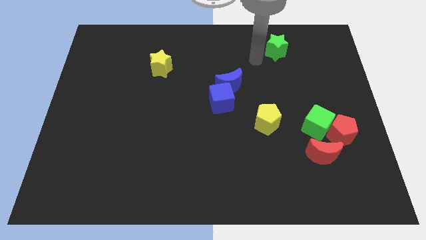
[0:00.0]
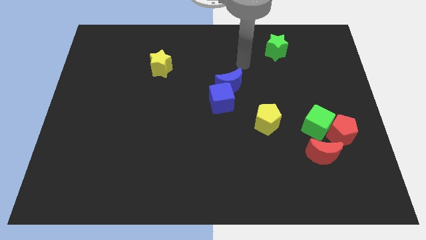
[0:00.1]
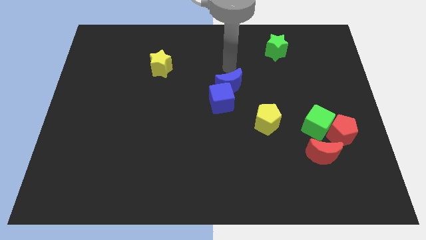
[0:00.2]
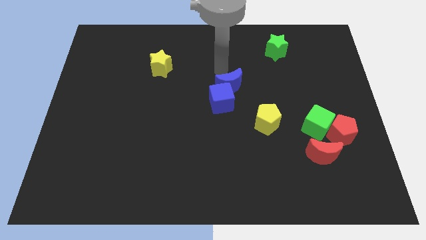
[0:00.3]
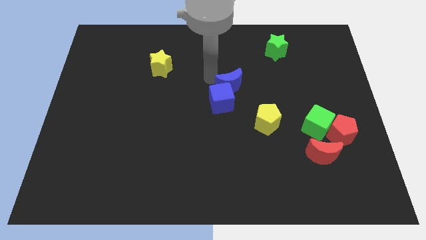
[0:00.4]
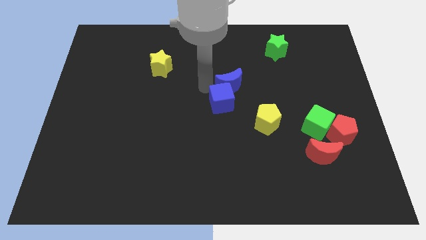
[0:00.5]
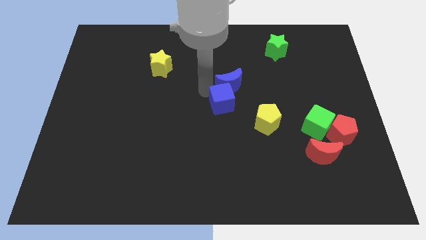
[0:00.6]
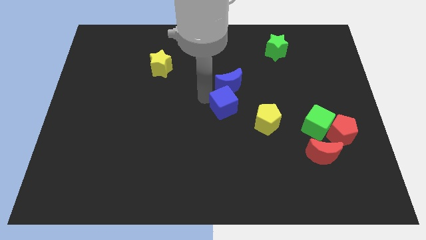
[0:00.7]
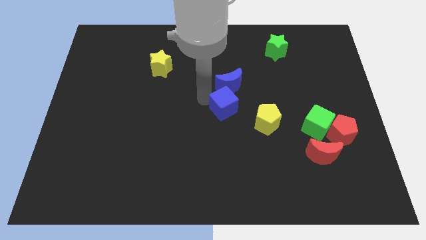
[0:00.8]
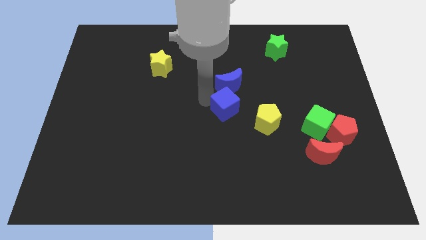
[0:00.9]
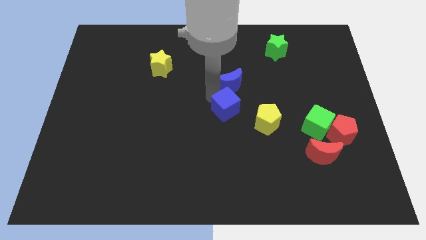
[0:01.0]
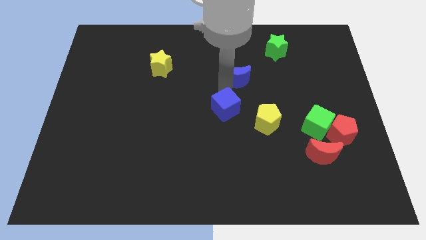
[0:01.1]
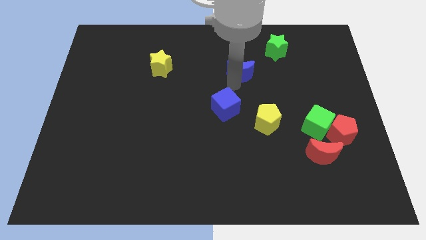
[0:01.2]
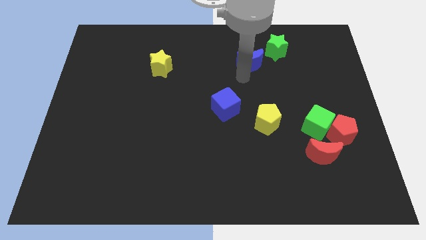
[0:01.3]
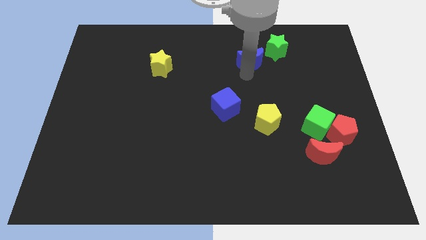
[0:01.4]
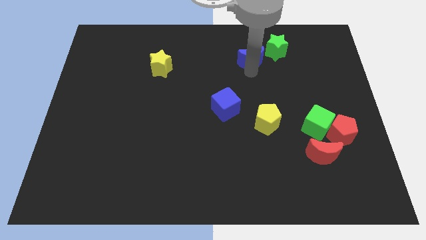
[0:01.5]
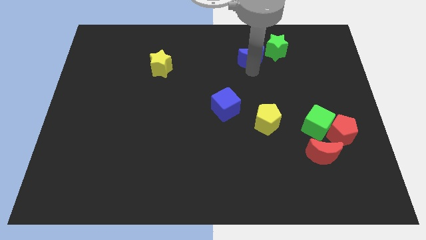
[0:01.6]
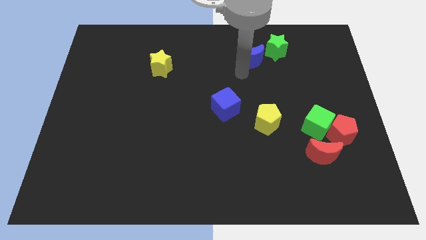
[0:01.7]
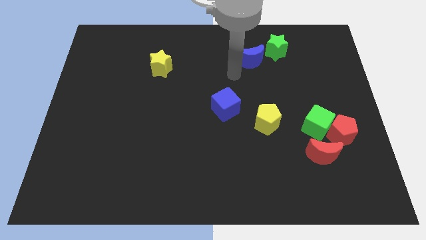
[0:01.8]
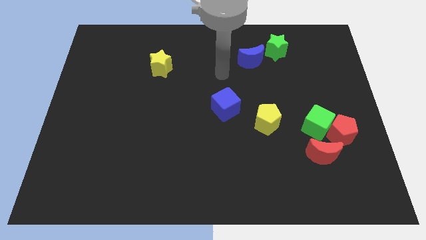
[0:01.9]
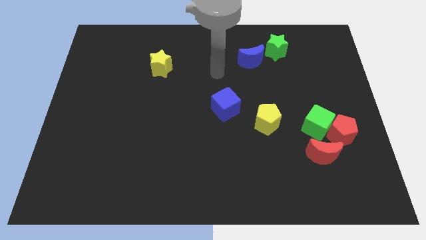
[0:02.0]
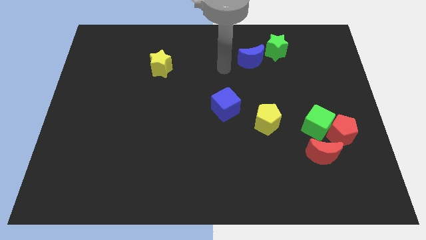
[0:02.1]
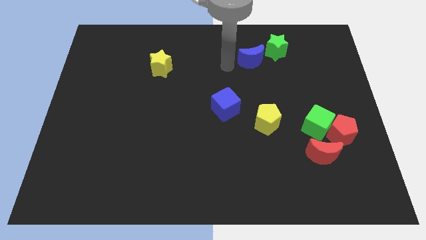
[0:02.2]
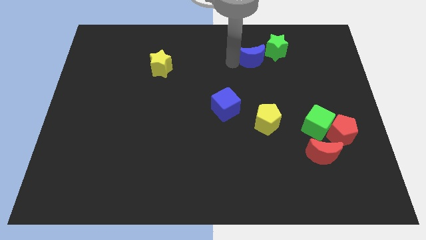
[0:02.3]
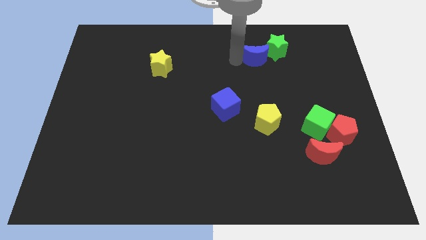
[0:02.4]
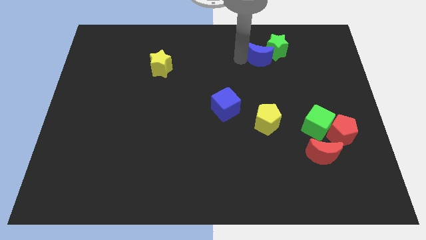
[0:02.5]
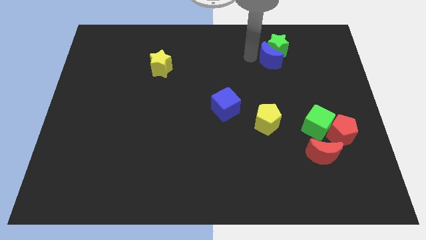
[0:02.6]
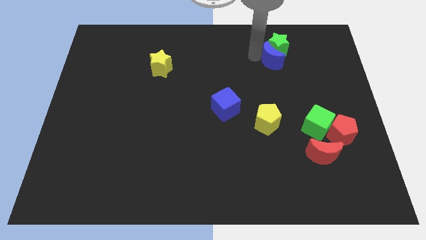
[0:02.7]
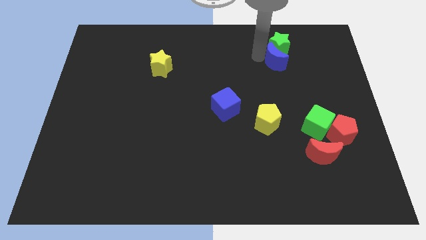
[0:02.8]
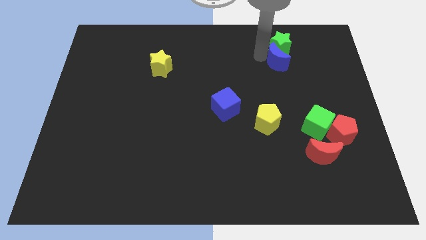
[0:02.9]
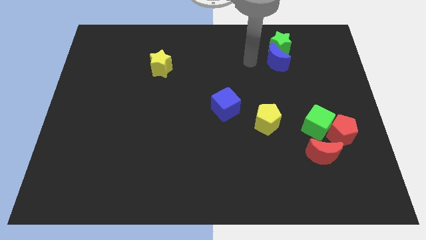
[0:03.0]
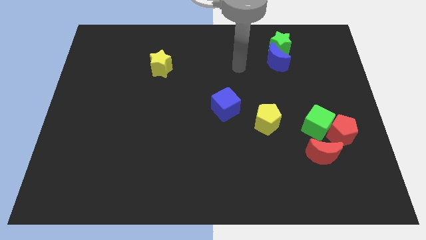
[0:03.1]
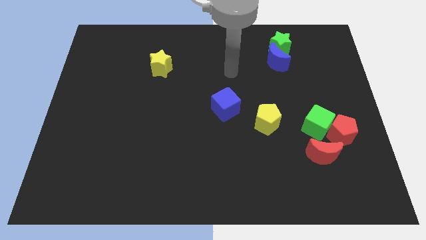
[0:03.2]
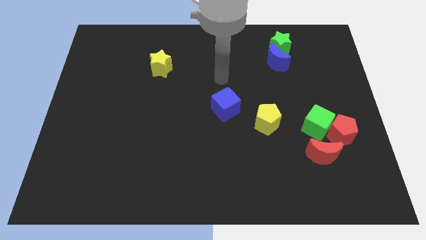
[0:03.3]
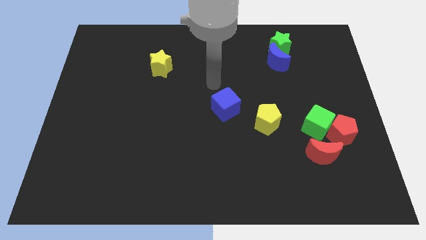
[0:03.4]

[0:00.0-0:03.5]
separate the blue crescent and blue cube

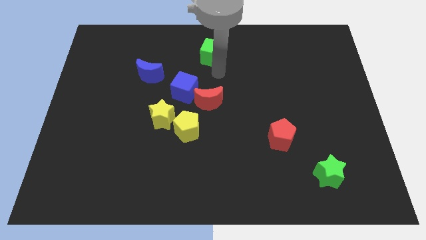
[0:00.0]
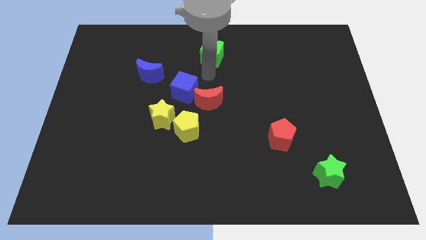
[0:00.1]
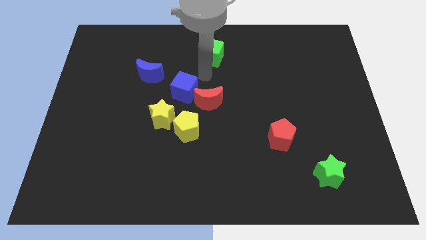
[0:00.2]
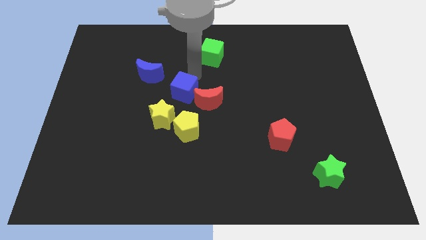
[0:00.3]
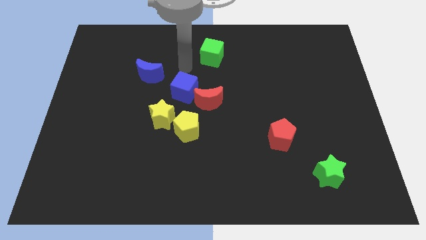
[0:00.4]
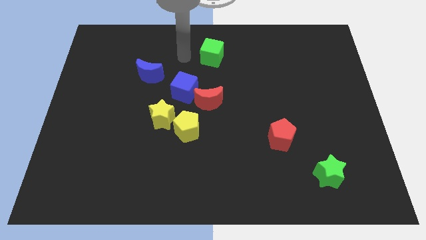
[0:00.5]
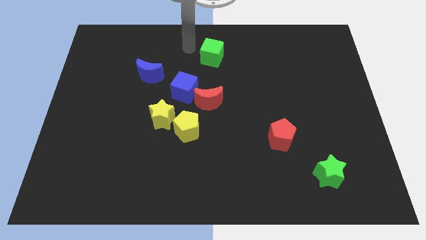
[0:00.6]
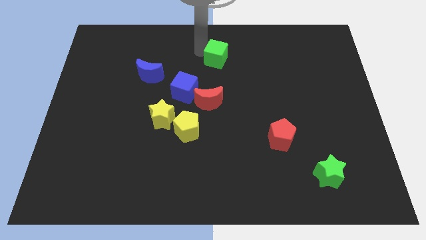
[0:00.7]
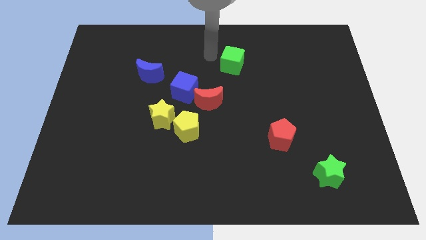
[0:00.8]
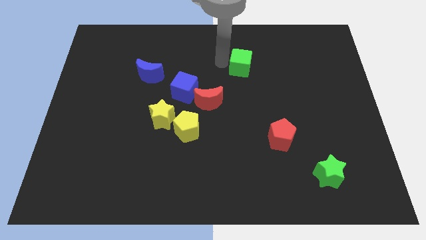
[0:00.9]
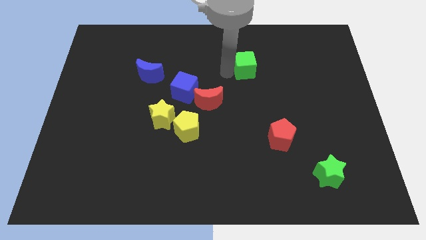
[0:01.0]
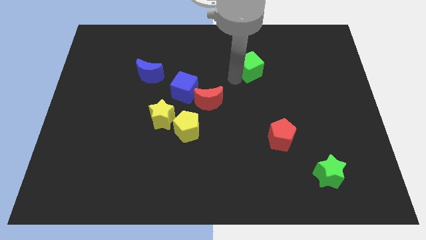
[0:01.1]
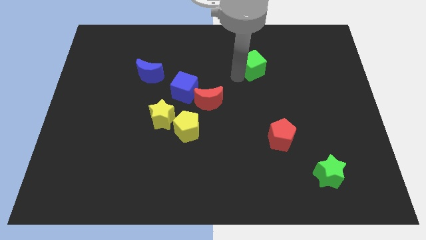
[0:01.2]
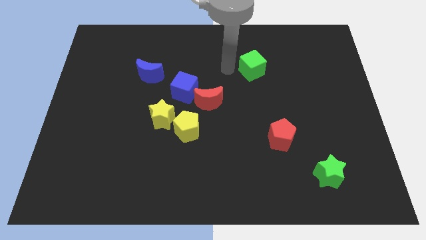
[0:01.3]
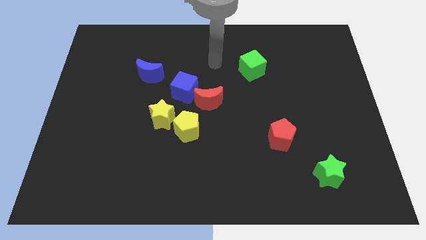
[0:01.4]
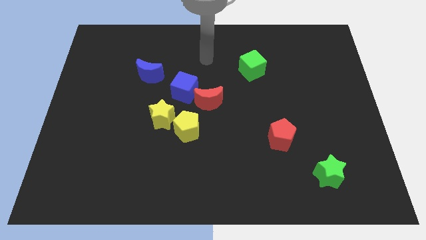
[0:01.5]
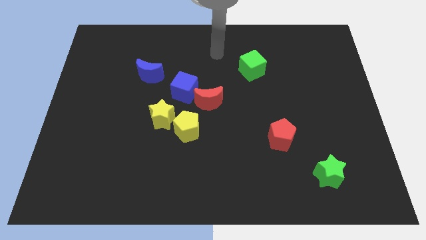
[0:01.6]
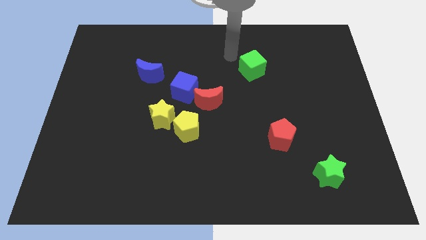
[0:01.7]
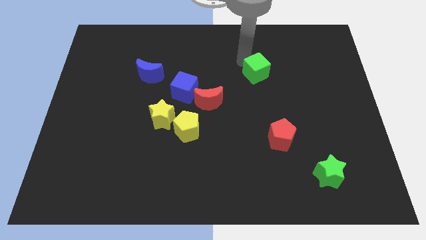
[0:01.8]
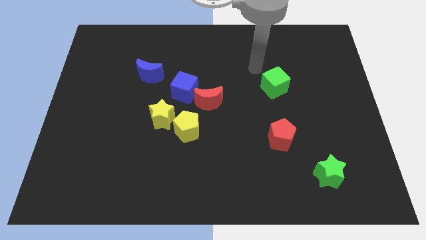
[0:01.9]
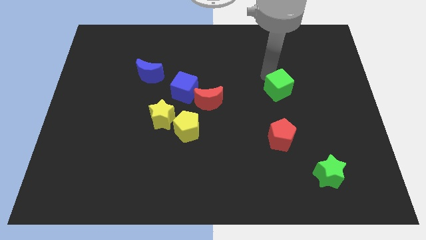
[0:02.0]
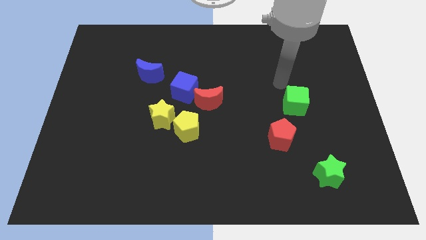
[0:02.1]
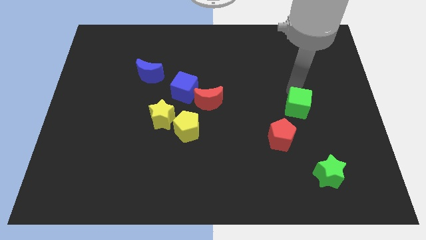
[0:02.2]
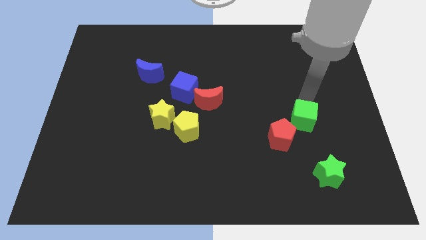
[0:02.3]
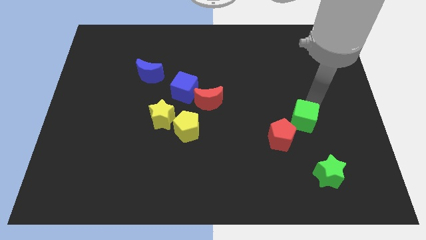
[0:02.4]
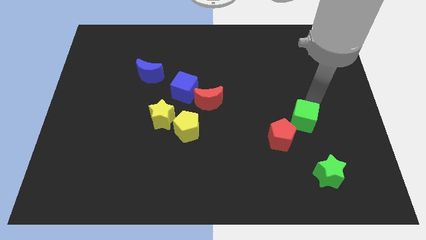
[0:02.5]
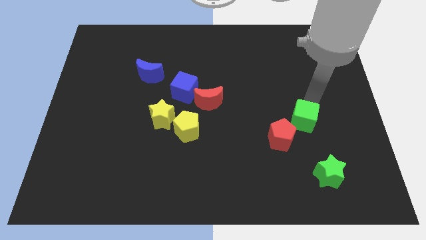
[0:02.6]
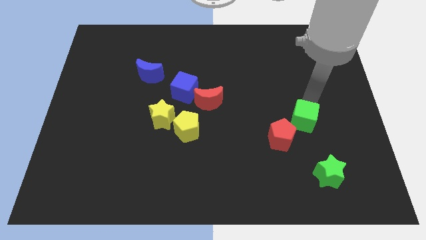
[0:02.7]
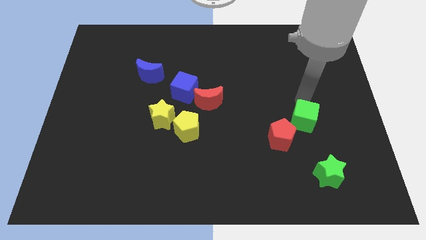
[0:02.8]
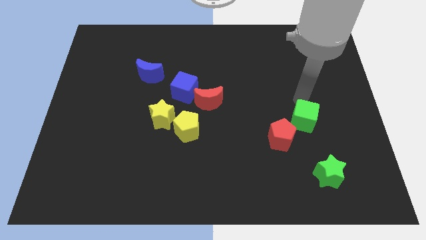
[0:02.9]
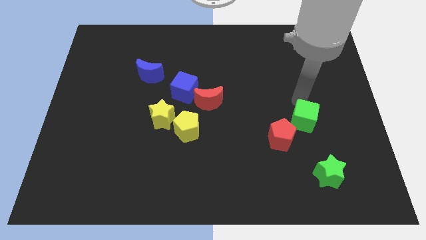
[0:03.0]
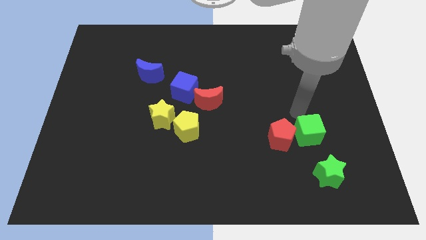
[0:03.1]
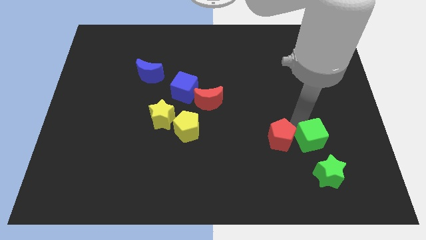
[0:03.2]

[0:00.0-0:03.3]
push the green cube to the top right side of the red pentagon

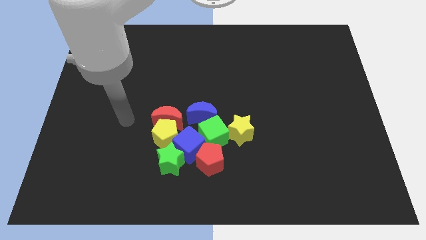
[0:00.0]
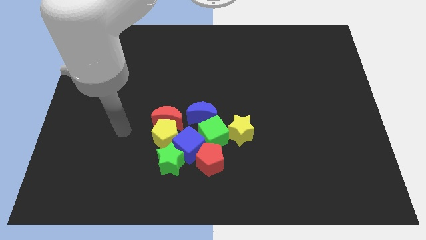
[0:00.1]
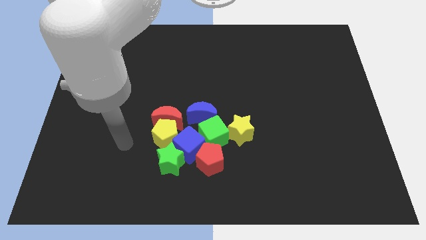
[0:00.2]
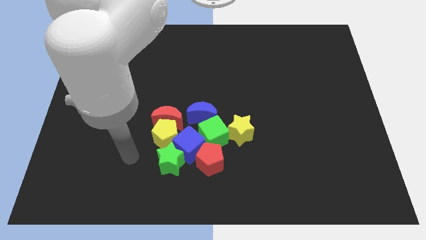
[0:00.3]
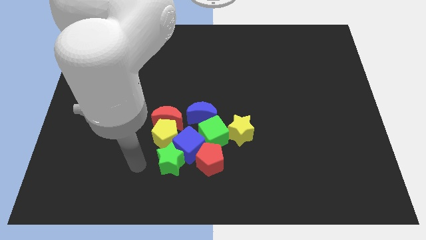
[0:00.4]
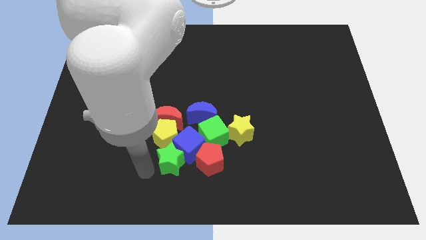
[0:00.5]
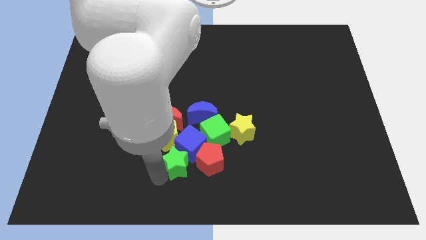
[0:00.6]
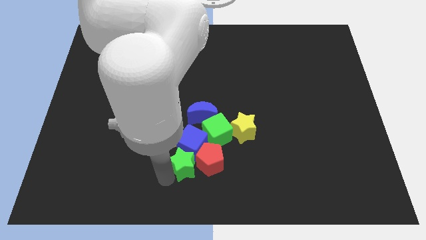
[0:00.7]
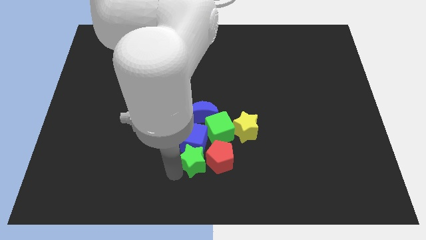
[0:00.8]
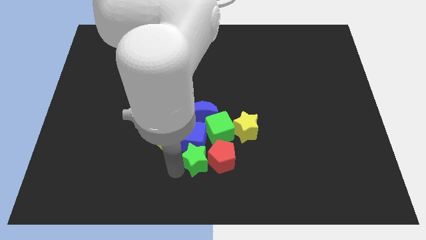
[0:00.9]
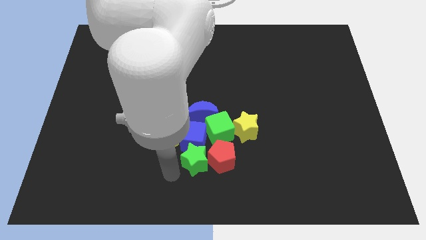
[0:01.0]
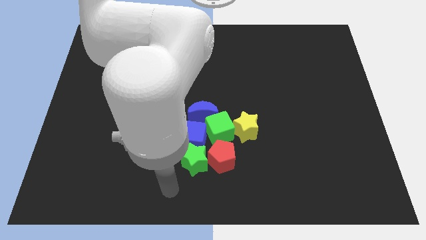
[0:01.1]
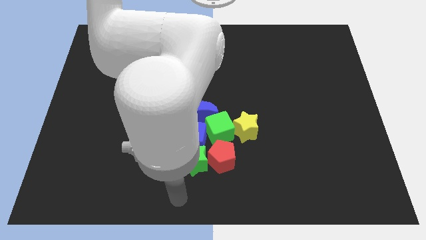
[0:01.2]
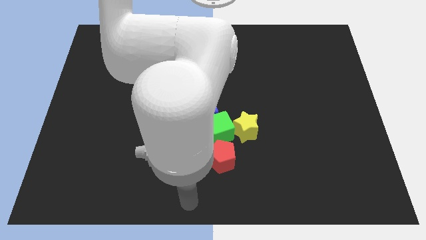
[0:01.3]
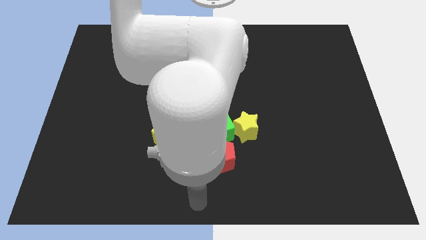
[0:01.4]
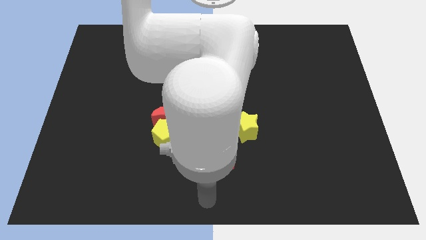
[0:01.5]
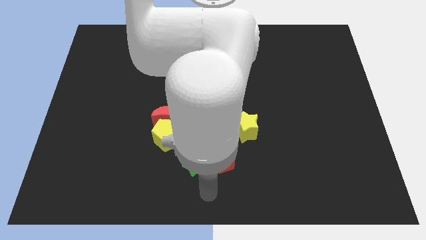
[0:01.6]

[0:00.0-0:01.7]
push the group of blocks to the center

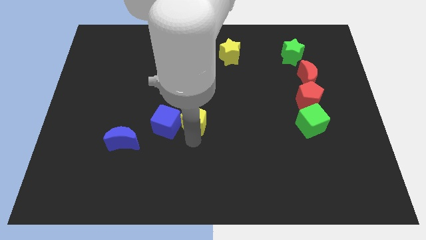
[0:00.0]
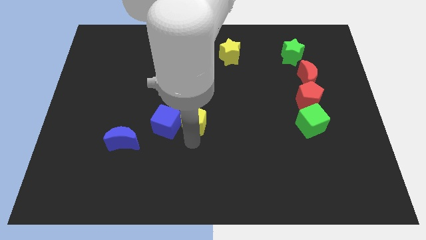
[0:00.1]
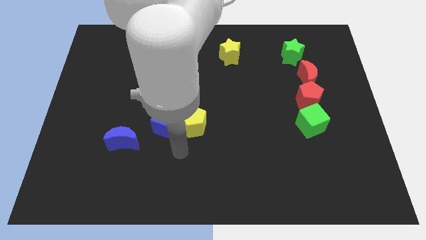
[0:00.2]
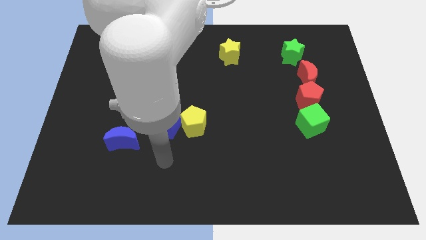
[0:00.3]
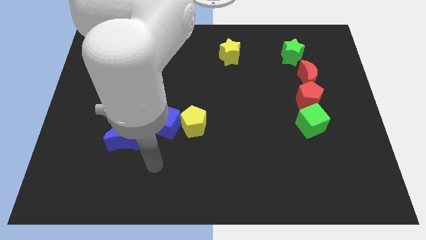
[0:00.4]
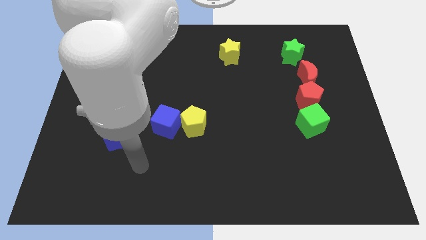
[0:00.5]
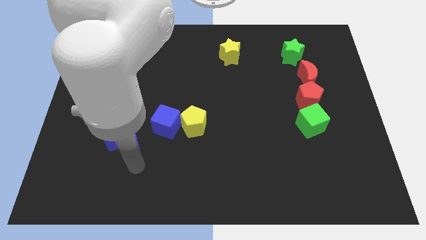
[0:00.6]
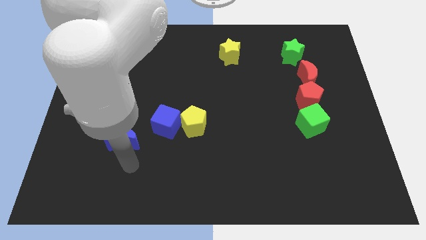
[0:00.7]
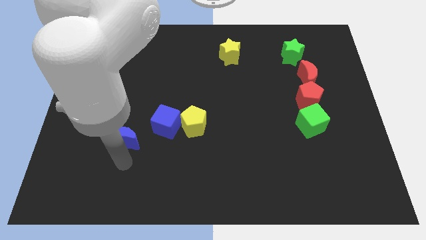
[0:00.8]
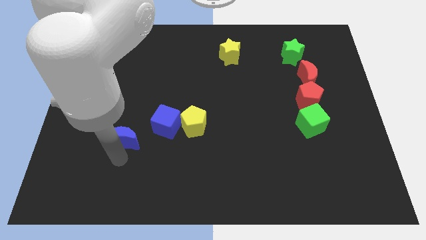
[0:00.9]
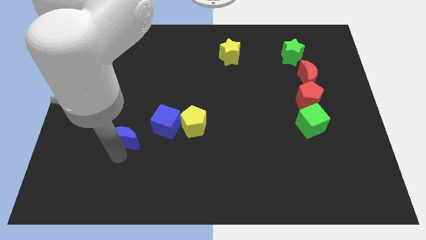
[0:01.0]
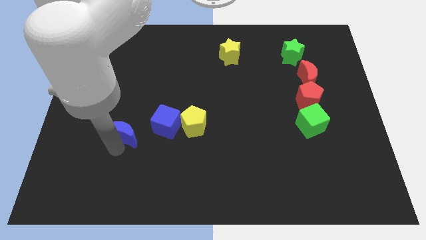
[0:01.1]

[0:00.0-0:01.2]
move the arm towards the bottom of the blue crescent
